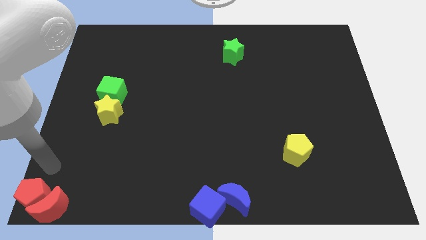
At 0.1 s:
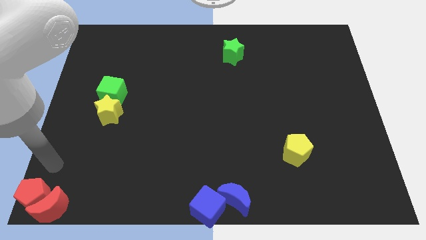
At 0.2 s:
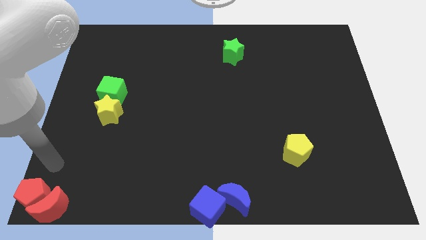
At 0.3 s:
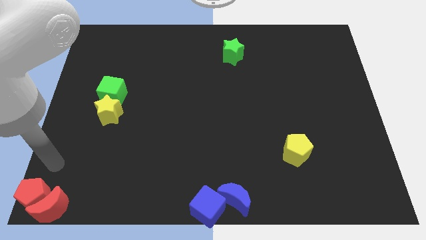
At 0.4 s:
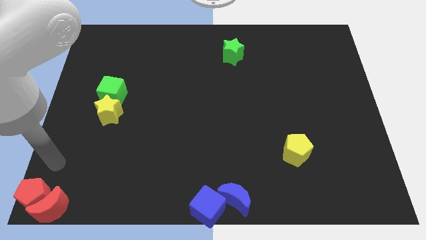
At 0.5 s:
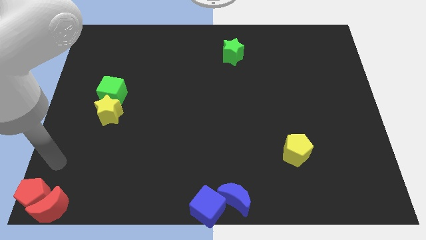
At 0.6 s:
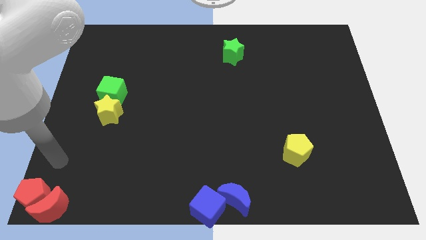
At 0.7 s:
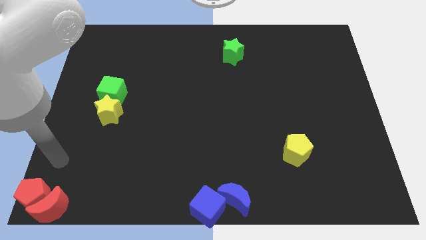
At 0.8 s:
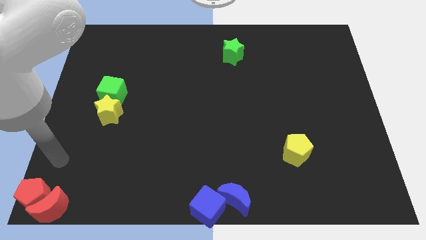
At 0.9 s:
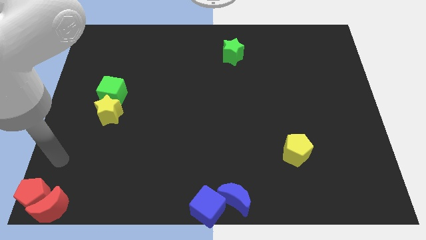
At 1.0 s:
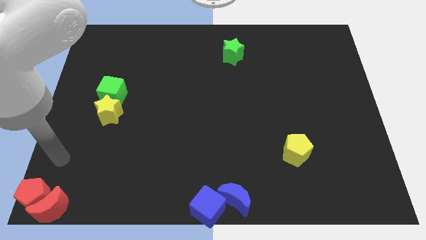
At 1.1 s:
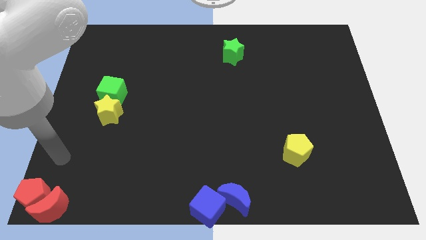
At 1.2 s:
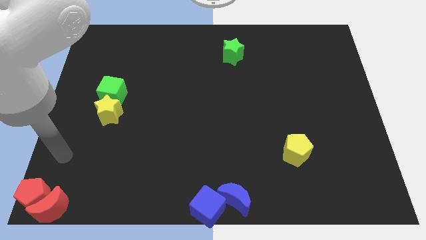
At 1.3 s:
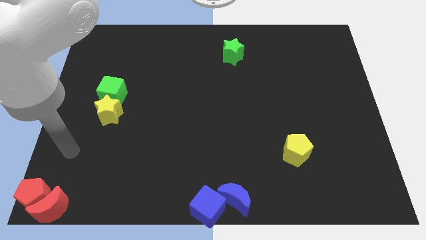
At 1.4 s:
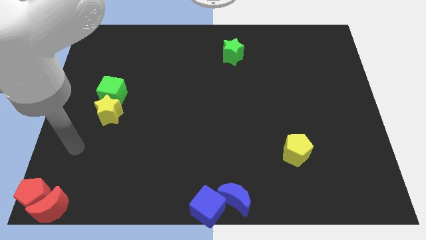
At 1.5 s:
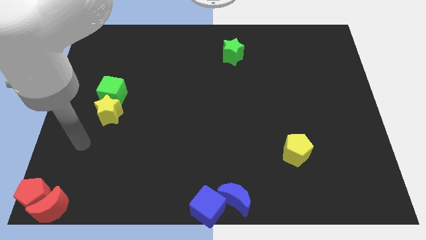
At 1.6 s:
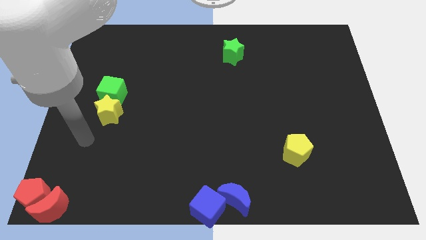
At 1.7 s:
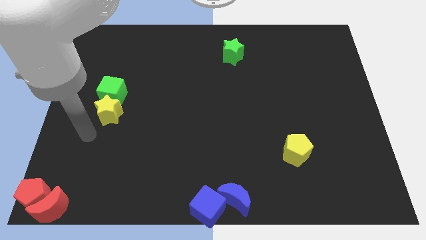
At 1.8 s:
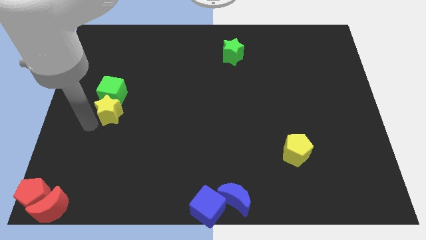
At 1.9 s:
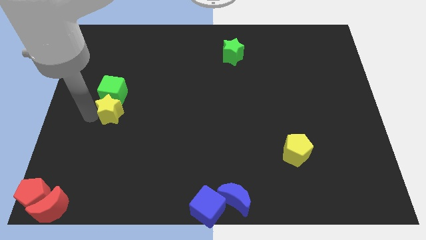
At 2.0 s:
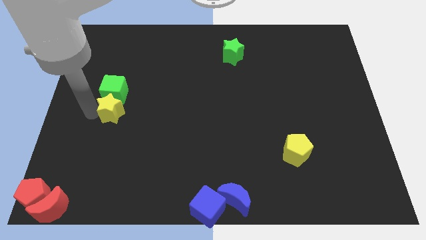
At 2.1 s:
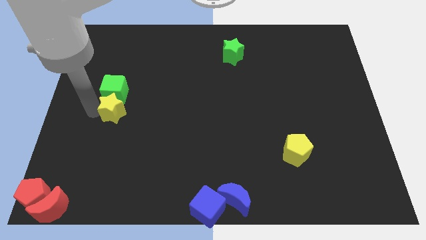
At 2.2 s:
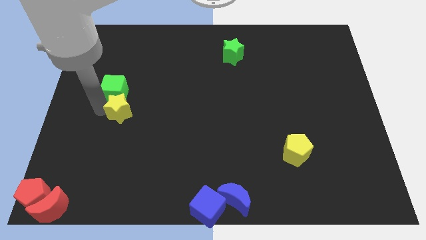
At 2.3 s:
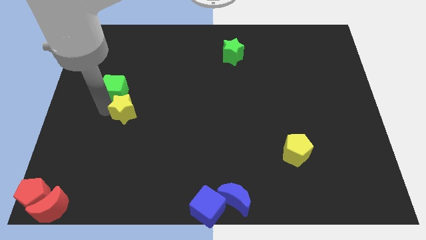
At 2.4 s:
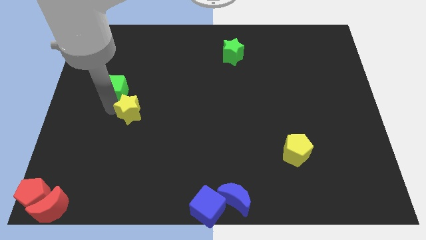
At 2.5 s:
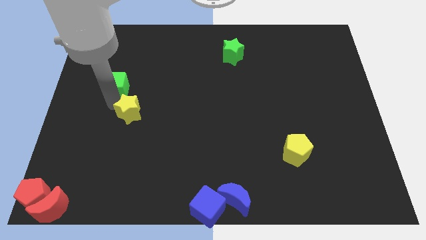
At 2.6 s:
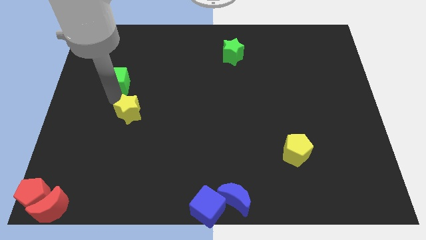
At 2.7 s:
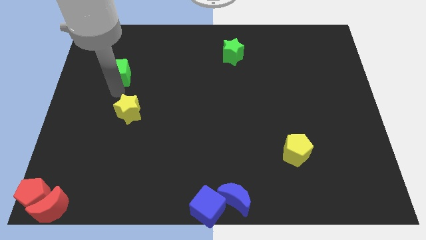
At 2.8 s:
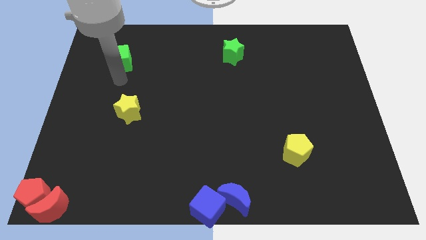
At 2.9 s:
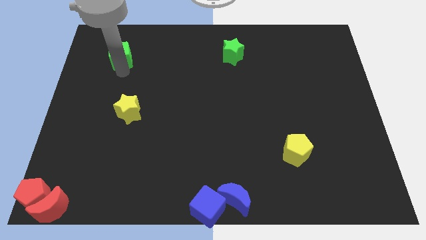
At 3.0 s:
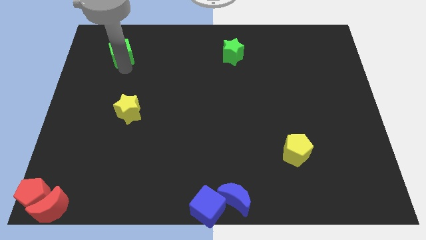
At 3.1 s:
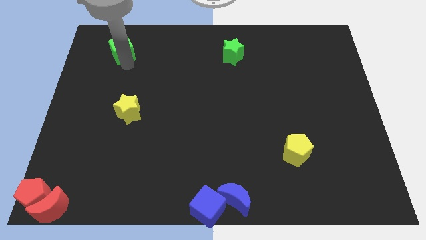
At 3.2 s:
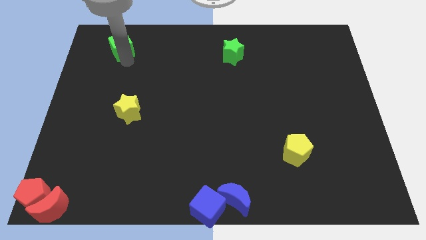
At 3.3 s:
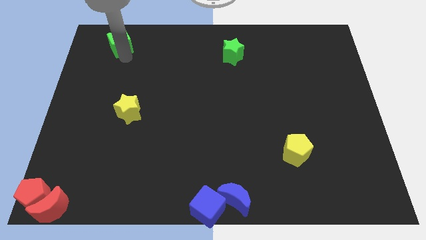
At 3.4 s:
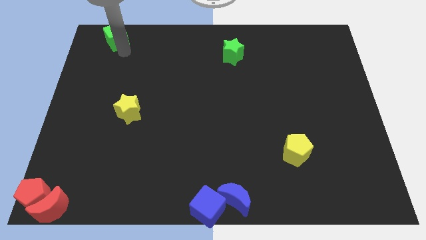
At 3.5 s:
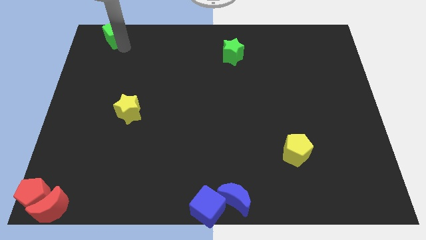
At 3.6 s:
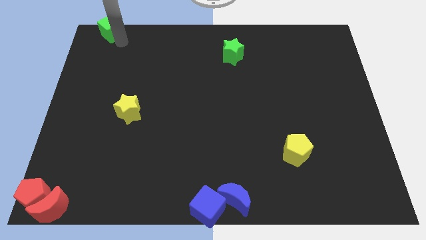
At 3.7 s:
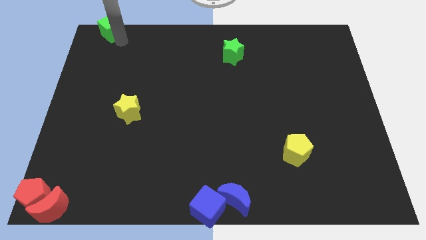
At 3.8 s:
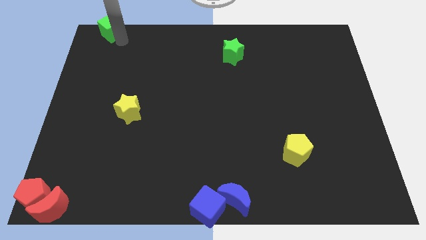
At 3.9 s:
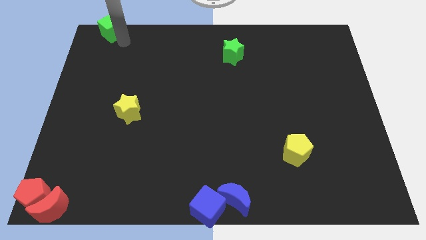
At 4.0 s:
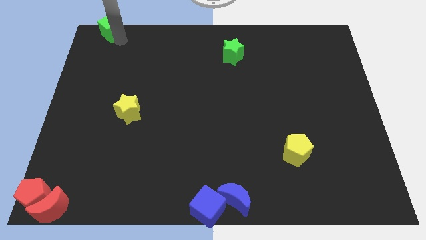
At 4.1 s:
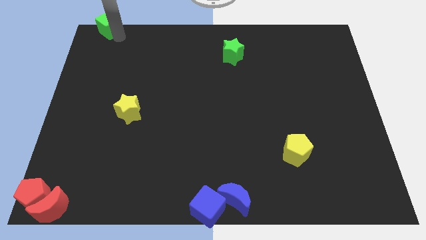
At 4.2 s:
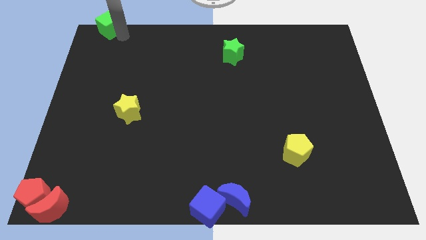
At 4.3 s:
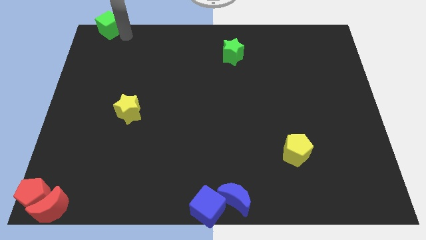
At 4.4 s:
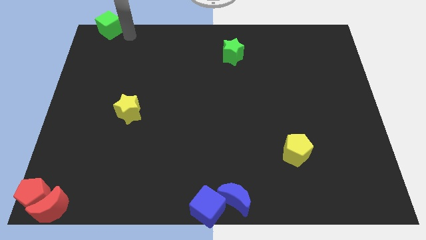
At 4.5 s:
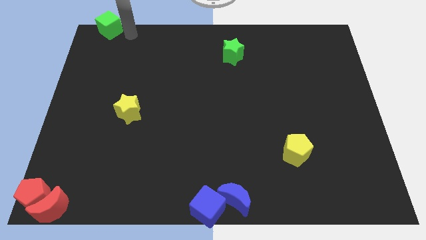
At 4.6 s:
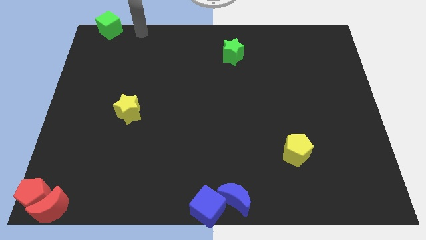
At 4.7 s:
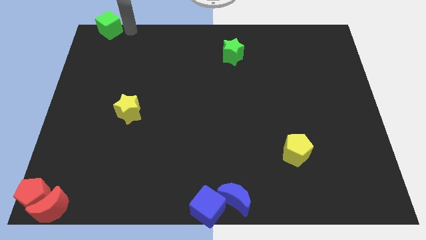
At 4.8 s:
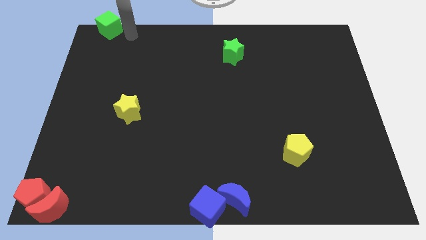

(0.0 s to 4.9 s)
push the green cube to the top left corner of the board

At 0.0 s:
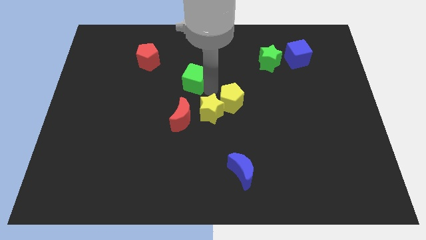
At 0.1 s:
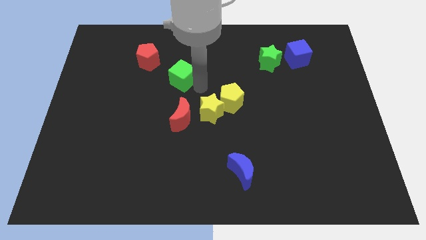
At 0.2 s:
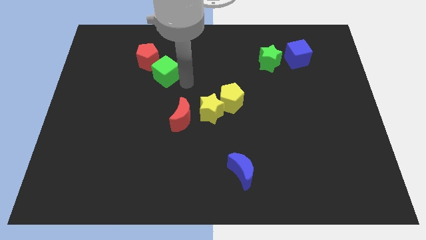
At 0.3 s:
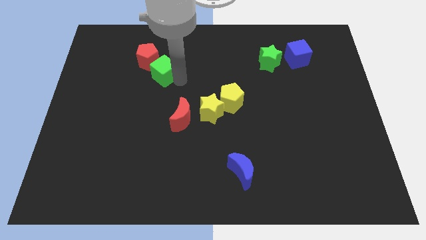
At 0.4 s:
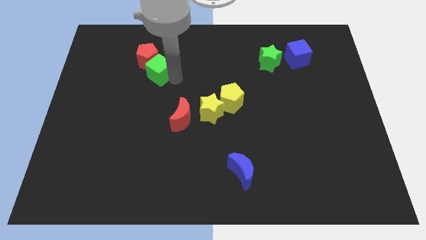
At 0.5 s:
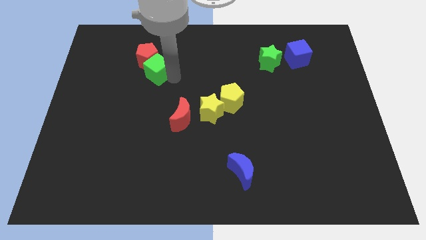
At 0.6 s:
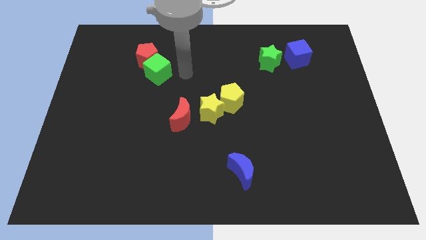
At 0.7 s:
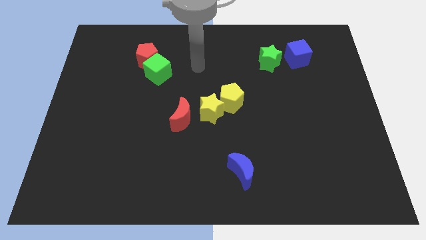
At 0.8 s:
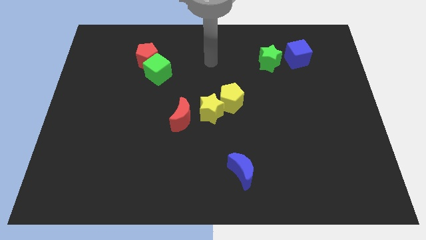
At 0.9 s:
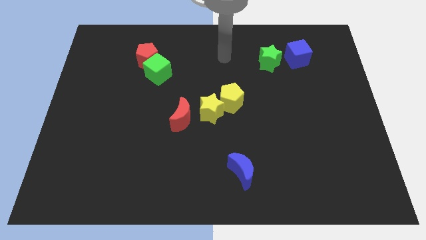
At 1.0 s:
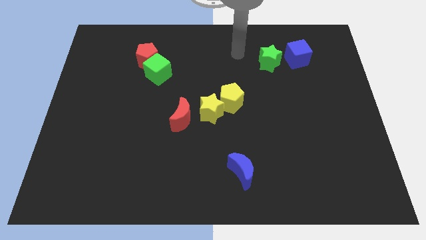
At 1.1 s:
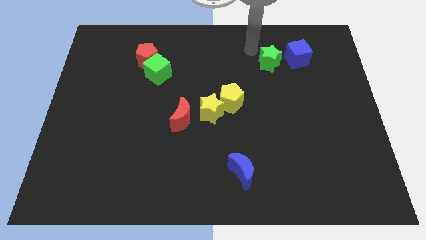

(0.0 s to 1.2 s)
move the green cube below th red pentagon

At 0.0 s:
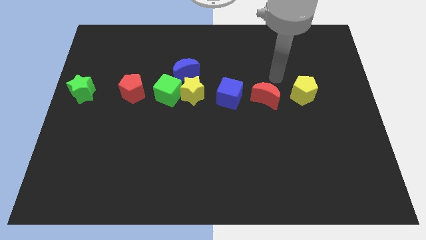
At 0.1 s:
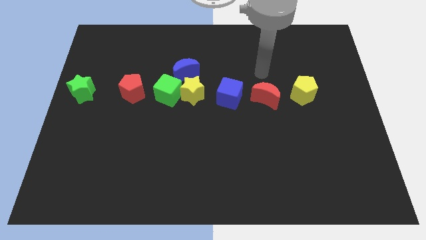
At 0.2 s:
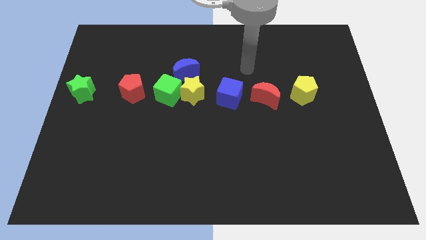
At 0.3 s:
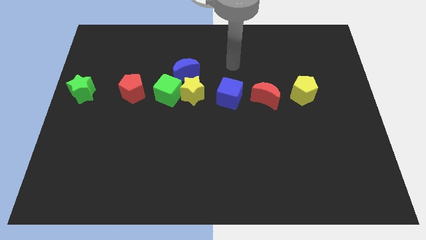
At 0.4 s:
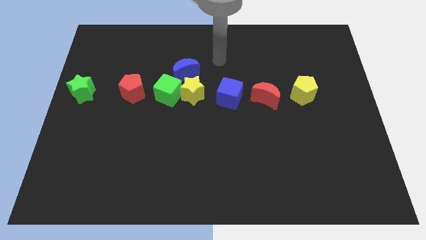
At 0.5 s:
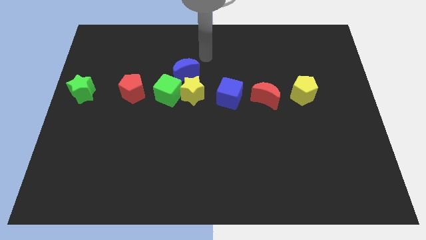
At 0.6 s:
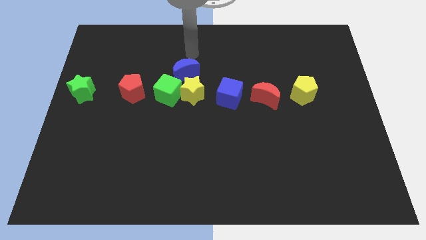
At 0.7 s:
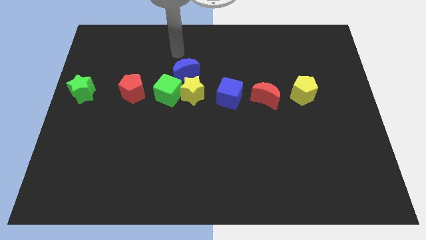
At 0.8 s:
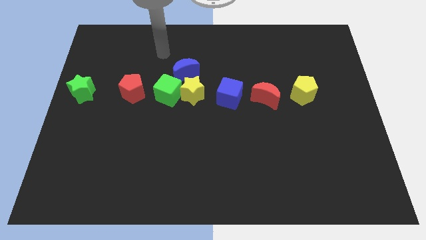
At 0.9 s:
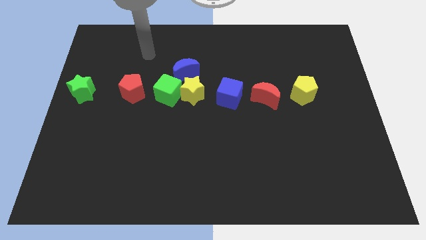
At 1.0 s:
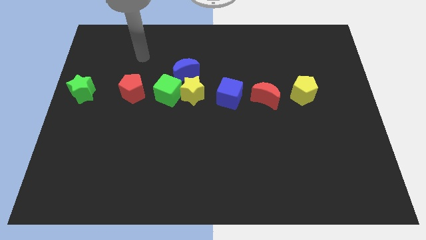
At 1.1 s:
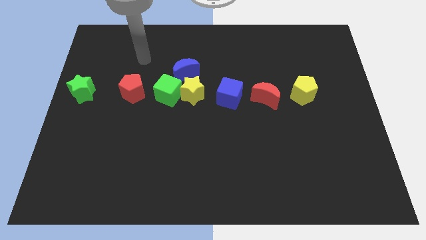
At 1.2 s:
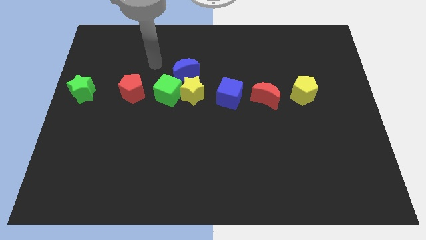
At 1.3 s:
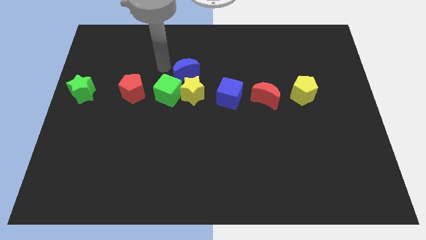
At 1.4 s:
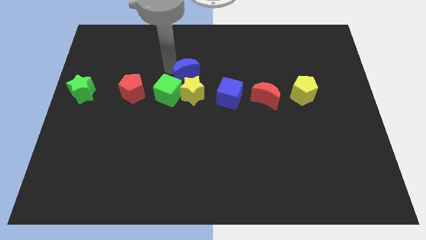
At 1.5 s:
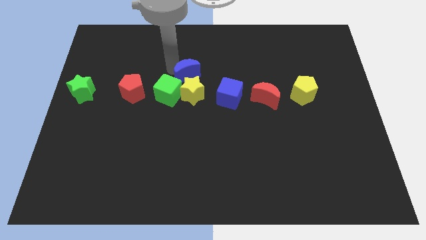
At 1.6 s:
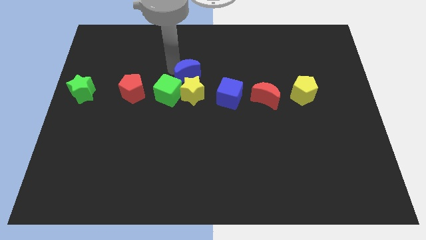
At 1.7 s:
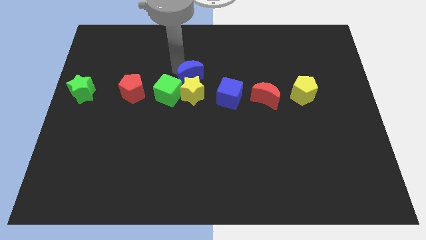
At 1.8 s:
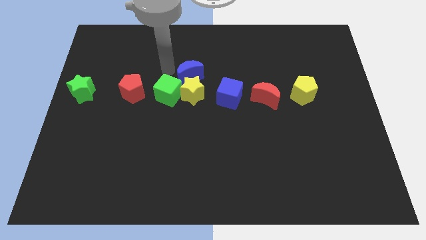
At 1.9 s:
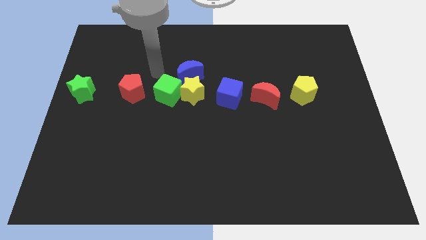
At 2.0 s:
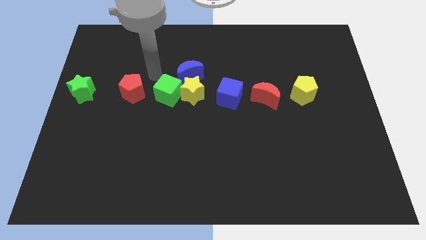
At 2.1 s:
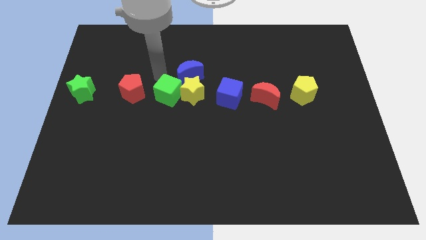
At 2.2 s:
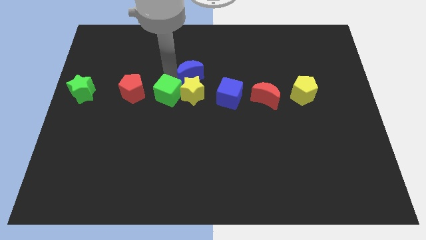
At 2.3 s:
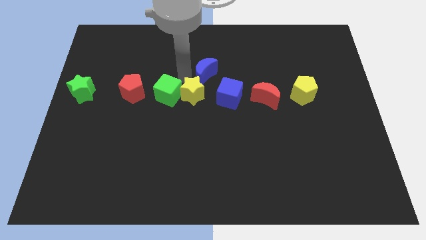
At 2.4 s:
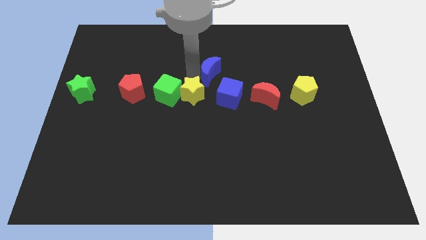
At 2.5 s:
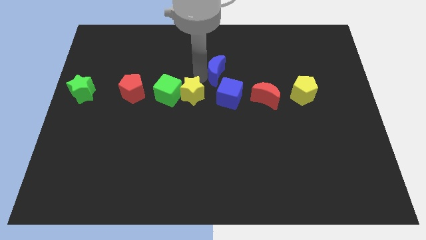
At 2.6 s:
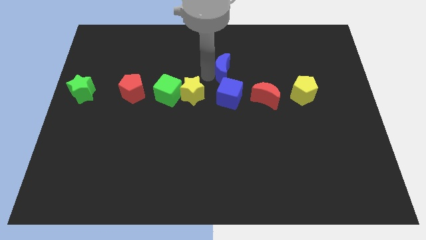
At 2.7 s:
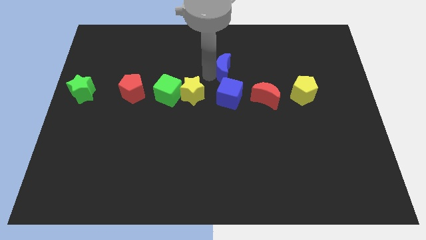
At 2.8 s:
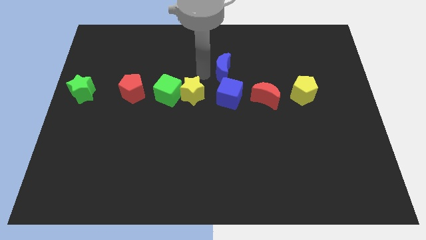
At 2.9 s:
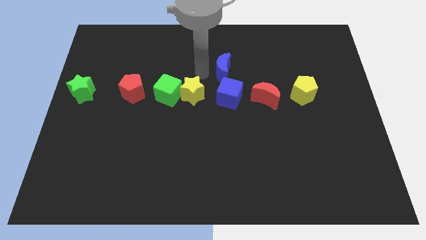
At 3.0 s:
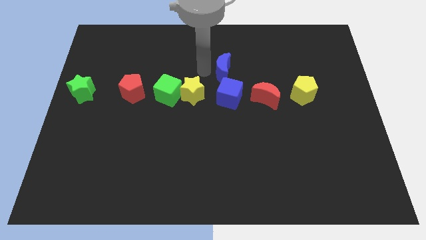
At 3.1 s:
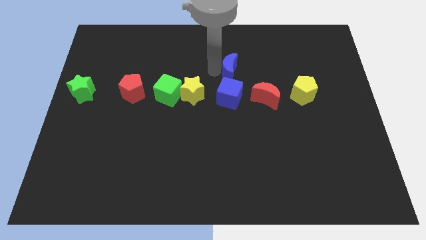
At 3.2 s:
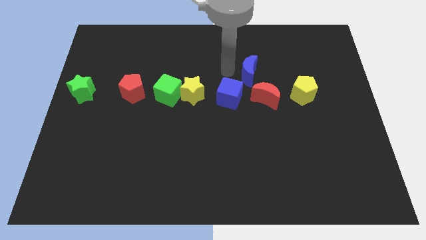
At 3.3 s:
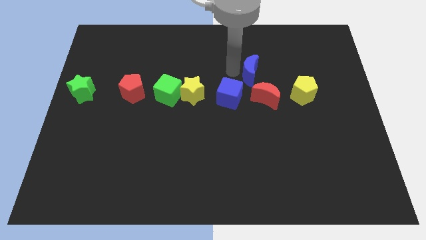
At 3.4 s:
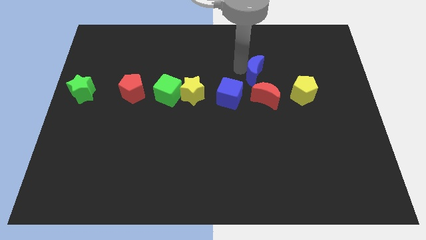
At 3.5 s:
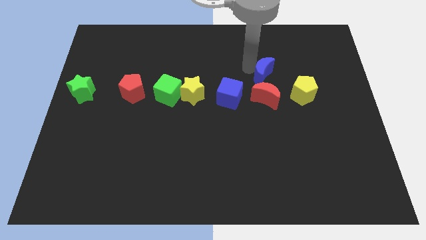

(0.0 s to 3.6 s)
move the blue crescent to the top of the red crescent
